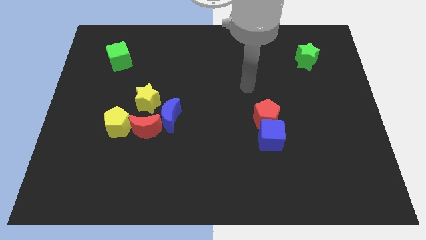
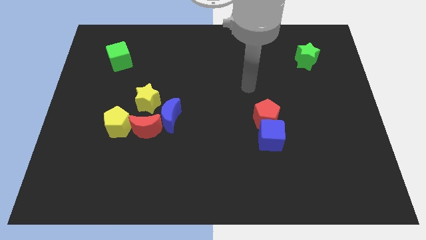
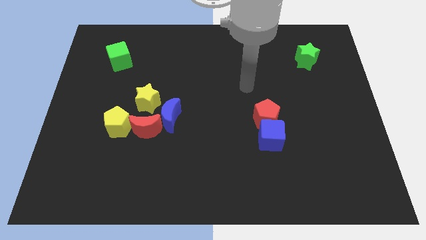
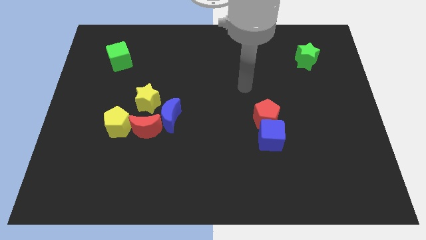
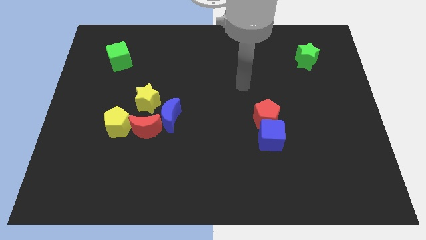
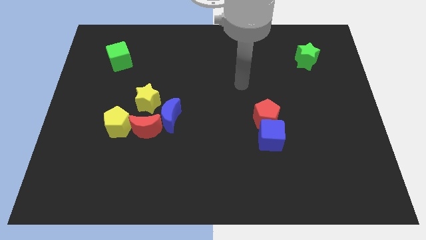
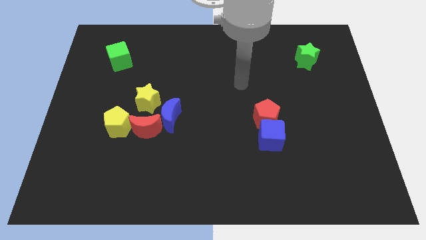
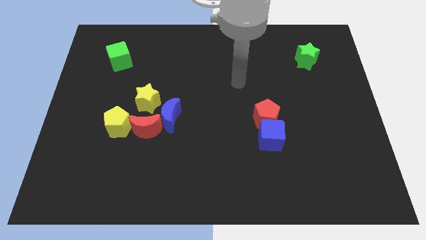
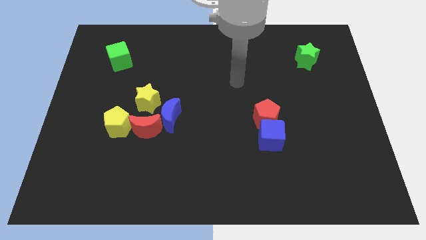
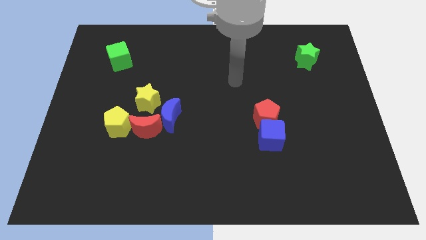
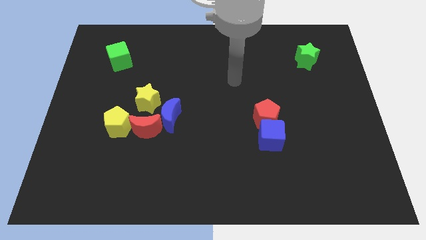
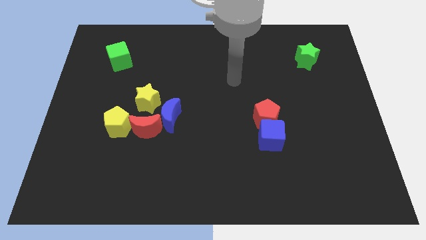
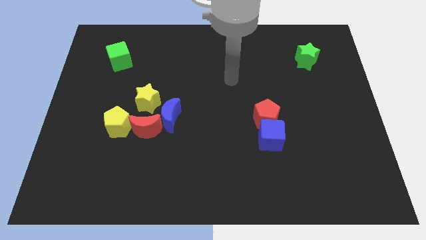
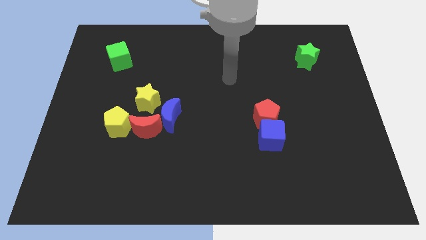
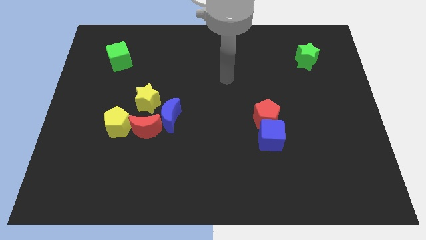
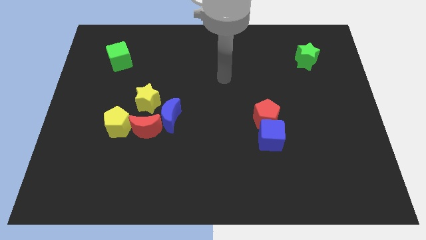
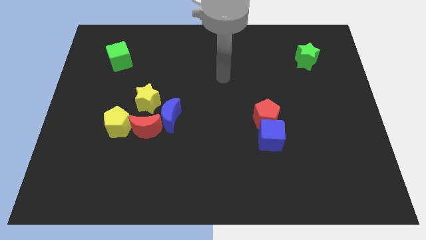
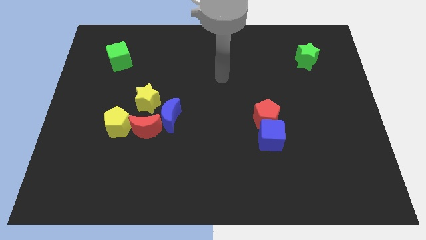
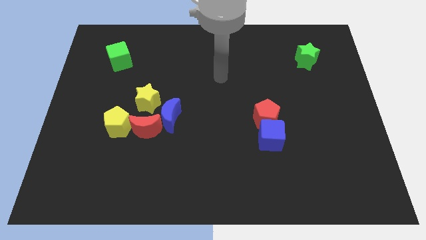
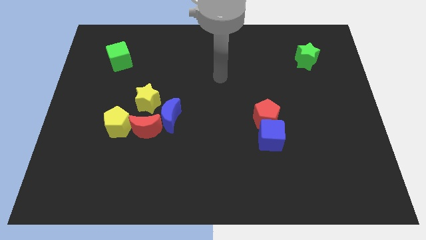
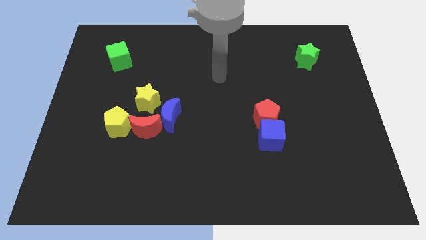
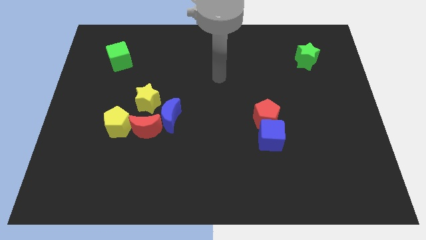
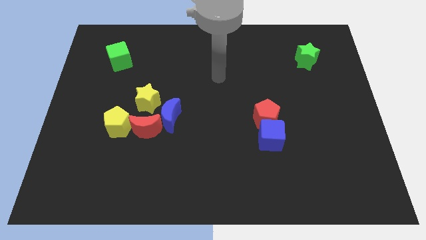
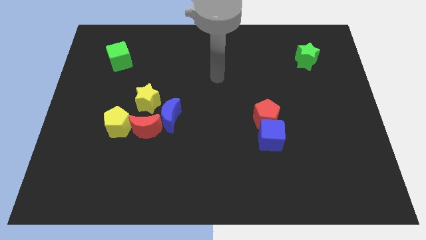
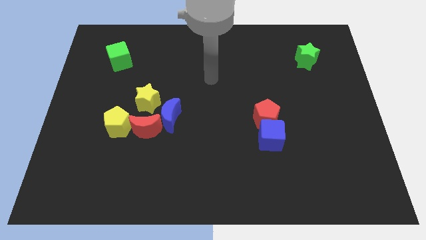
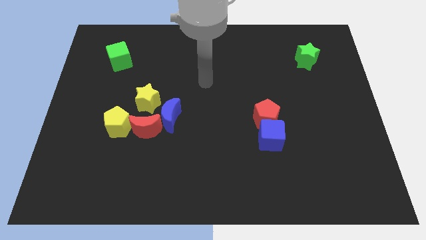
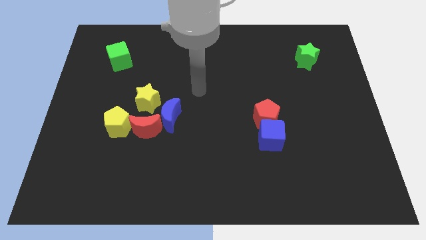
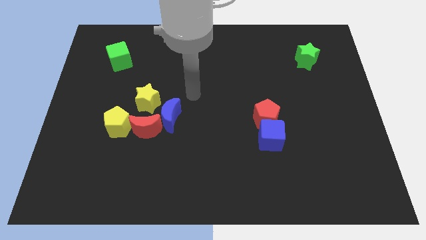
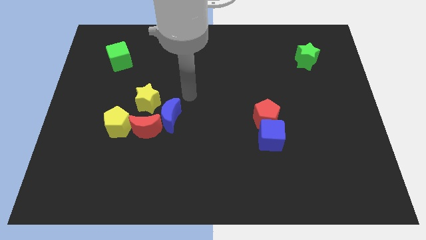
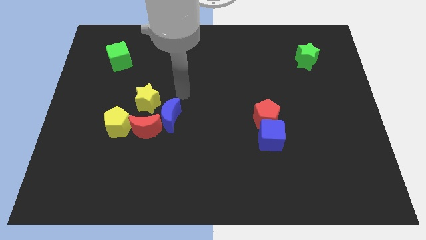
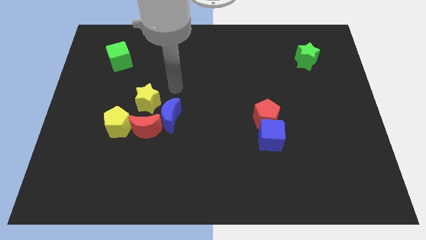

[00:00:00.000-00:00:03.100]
move the hand towards the blue crescent

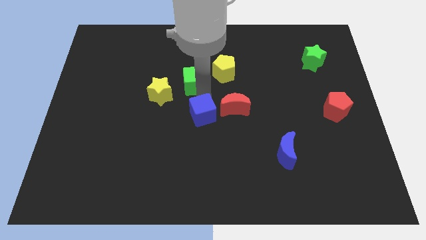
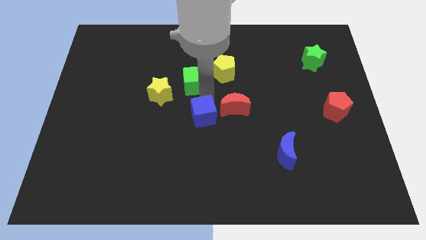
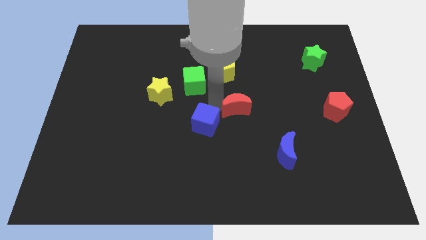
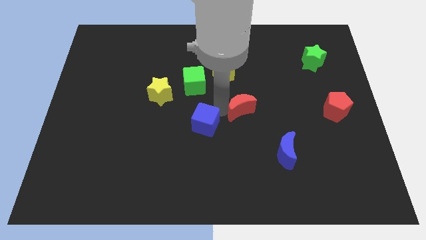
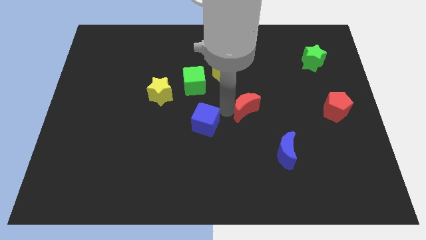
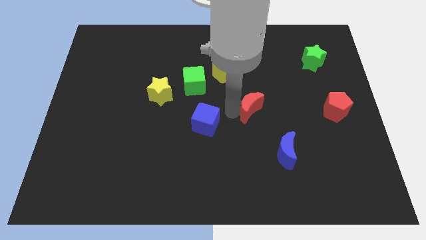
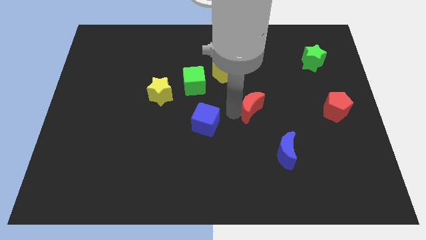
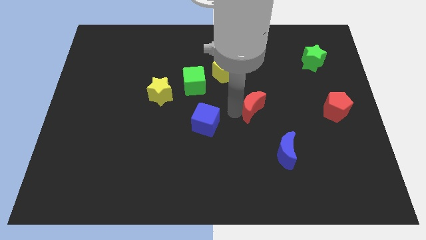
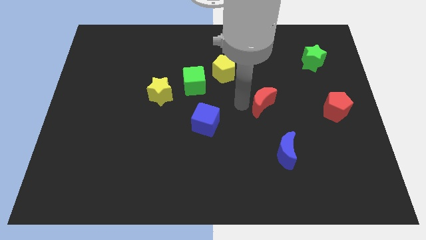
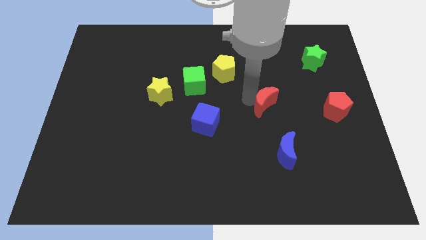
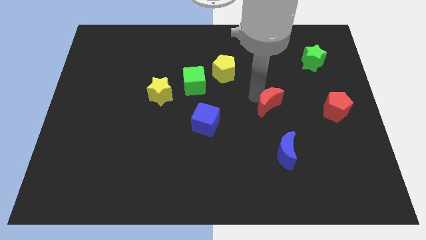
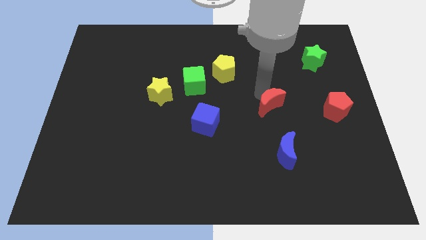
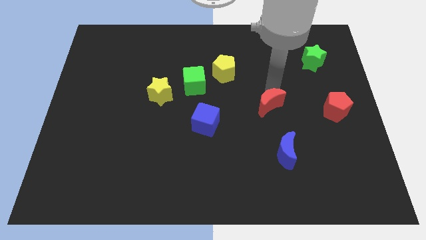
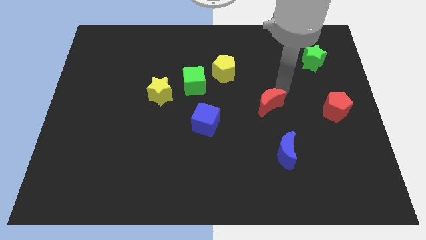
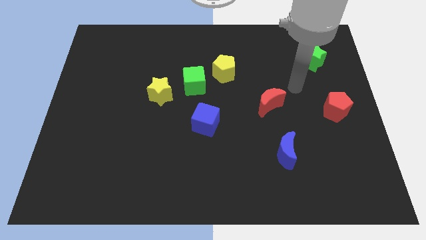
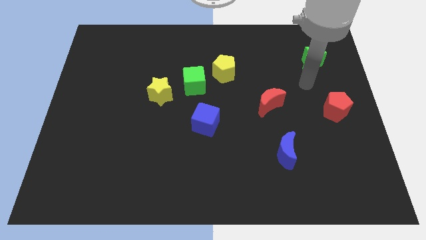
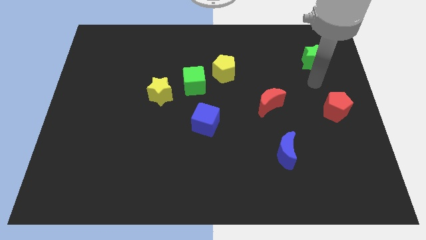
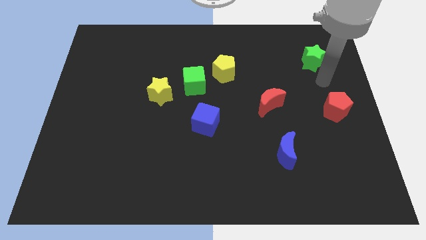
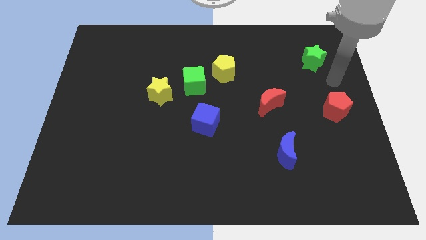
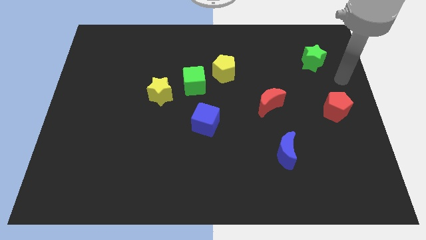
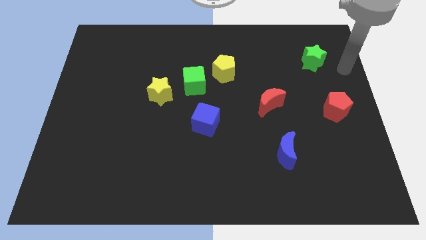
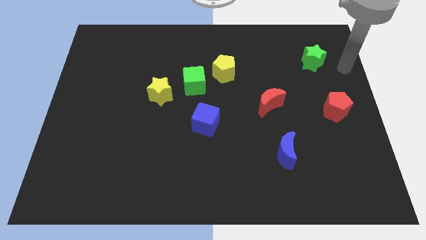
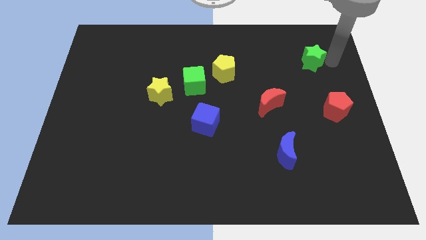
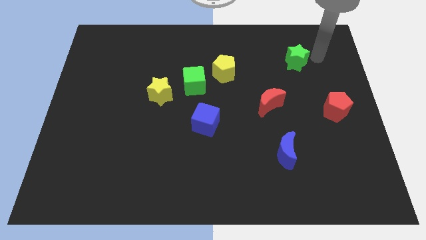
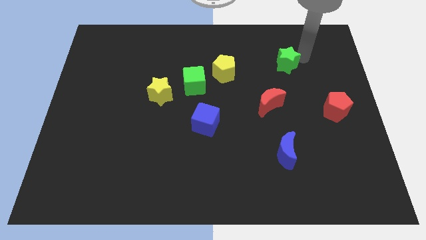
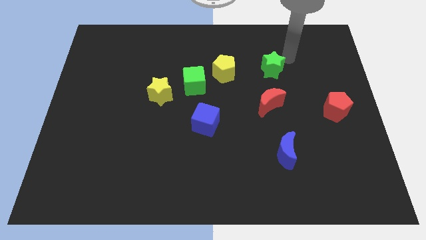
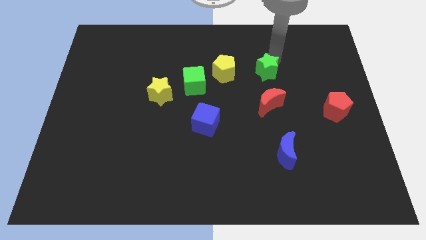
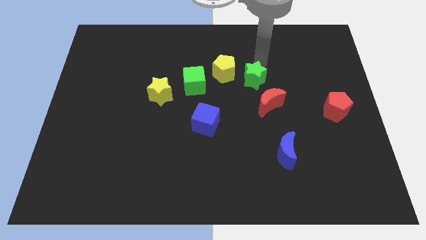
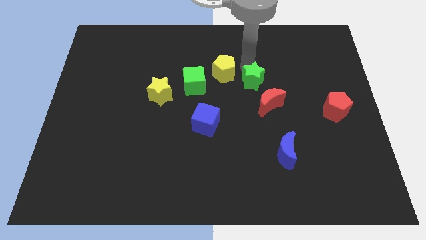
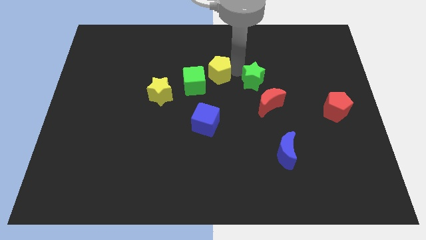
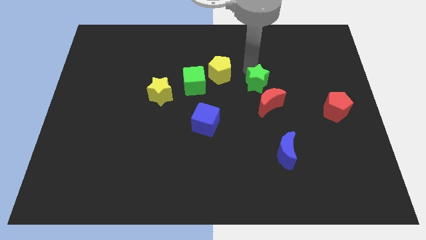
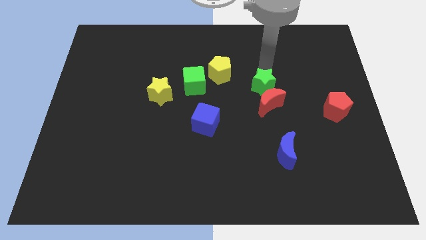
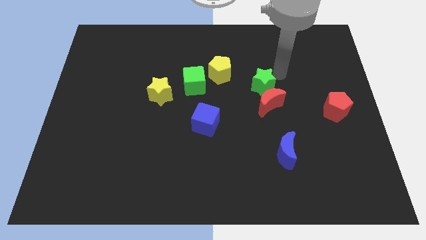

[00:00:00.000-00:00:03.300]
place the red moon vertically below the red moon

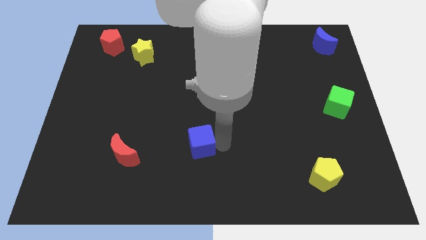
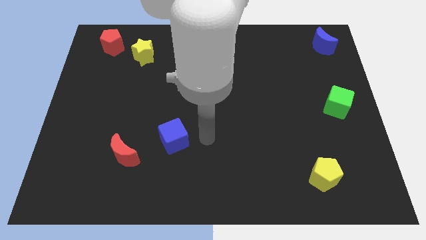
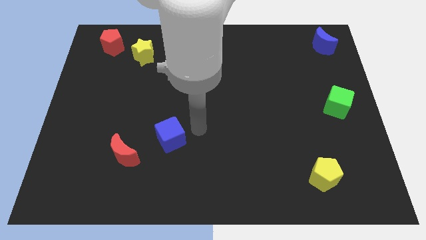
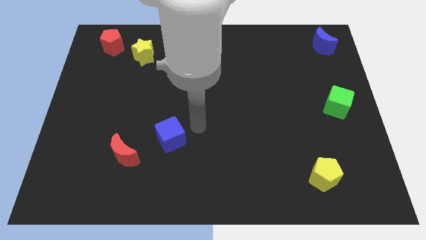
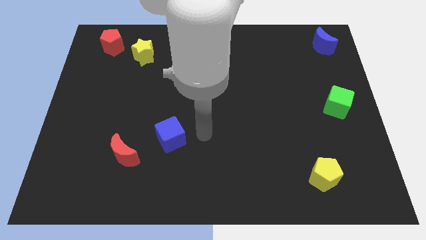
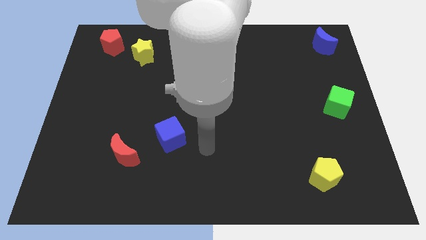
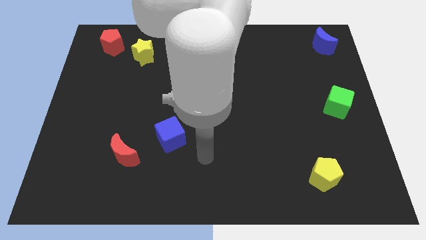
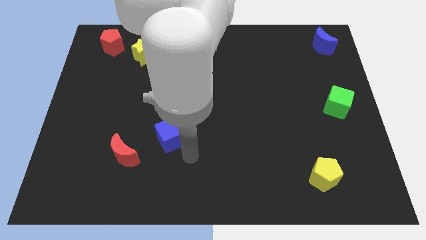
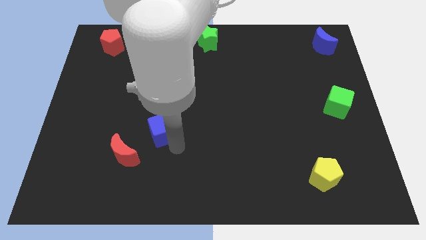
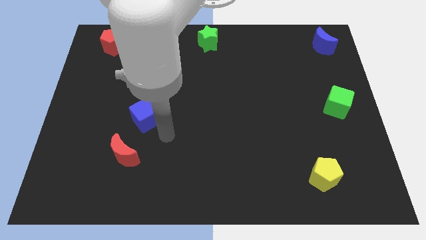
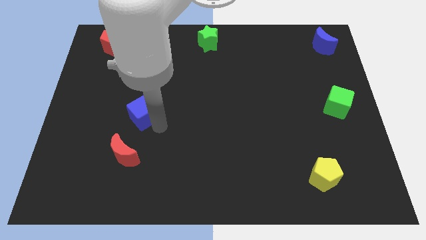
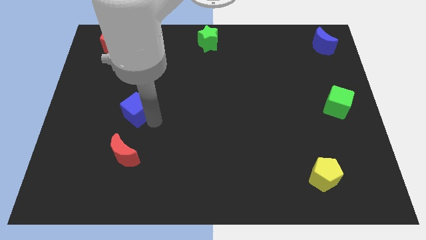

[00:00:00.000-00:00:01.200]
push the blue cube towards the top left side of the red crescent

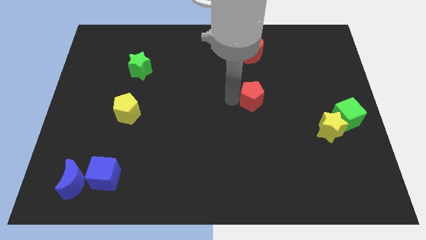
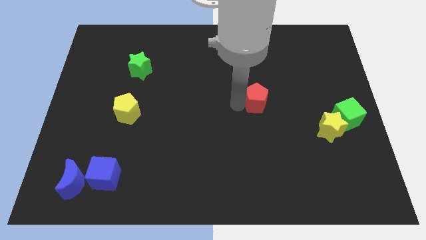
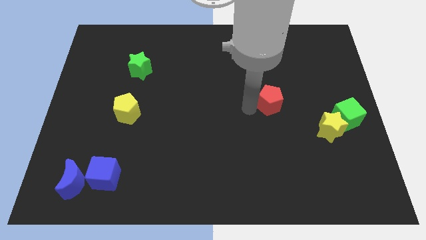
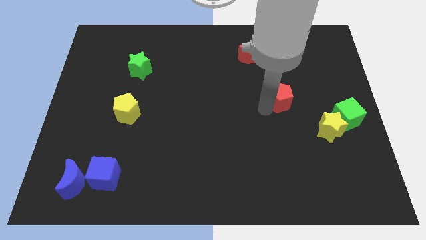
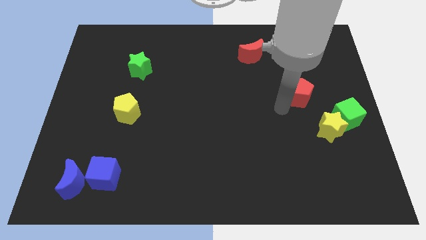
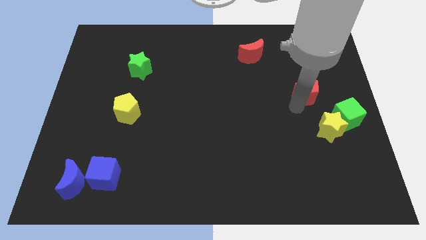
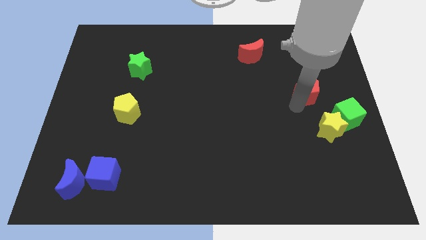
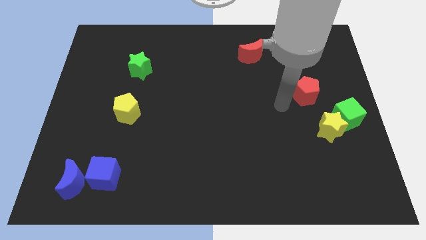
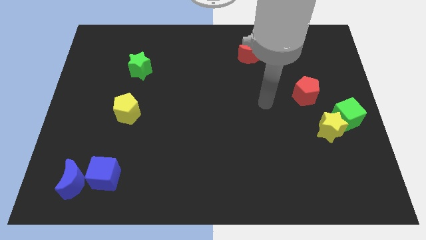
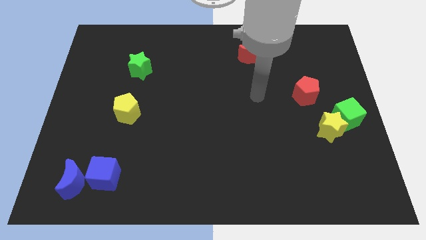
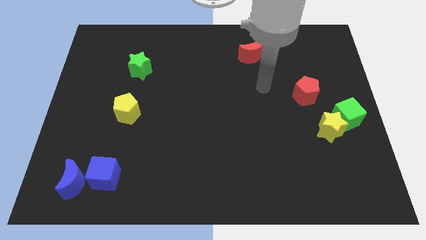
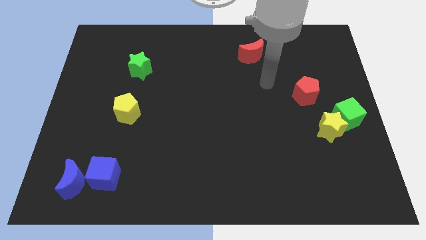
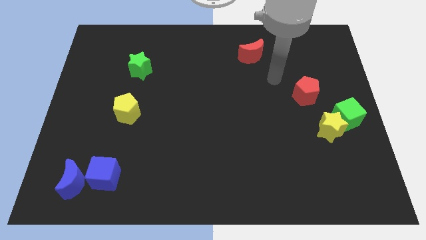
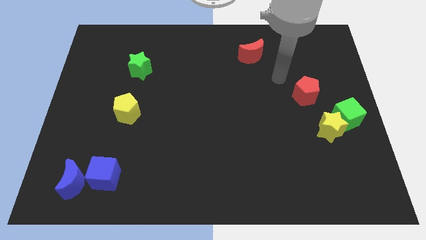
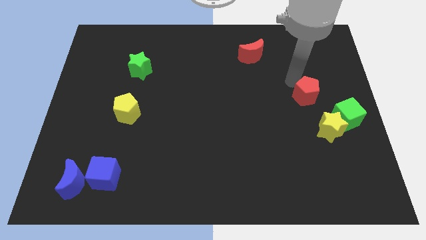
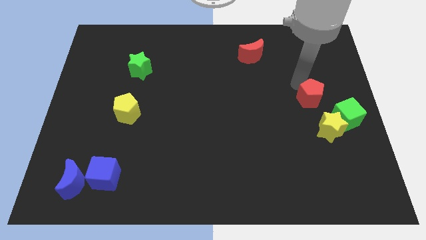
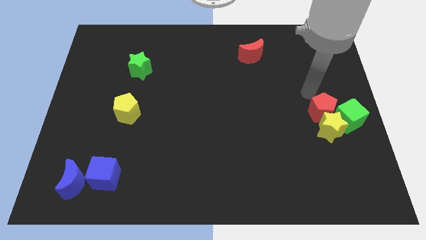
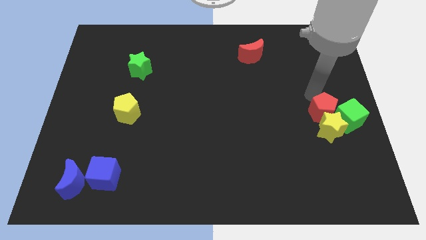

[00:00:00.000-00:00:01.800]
place red pentagon to the top of the yellow star
